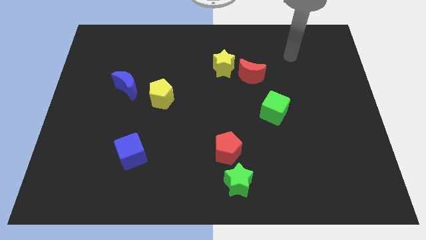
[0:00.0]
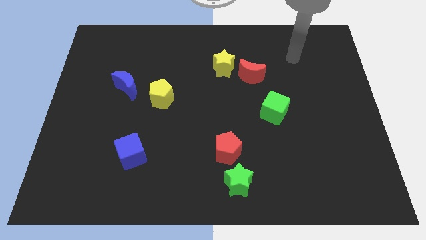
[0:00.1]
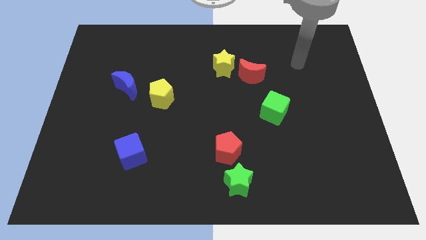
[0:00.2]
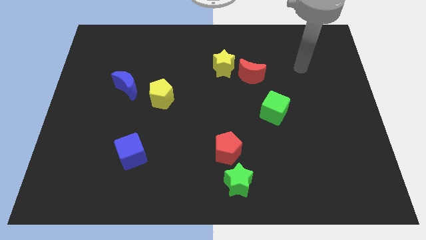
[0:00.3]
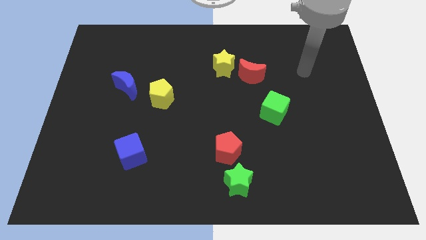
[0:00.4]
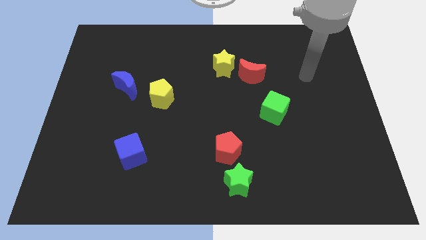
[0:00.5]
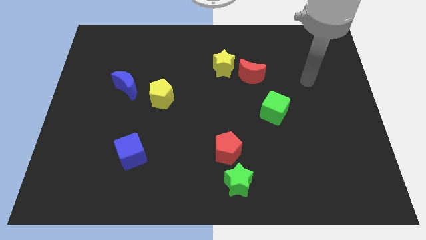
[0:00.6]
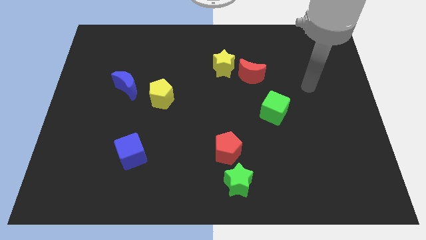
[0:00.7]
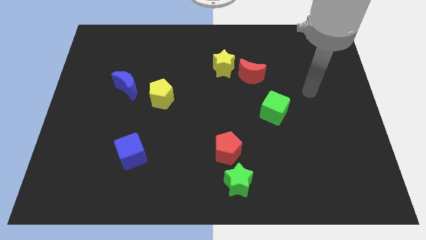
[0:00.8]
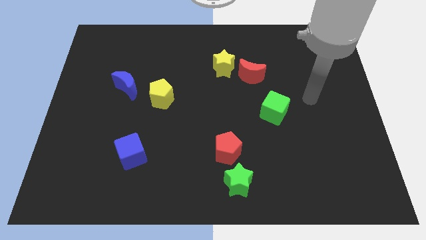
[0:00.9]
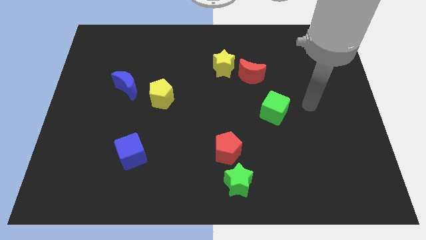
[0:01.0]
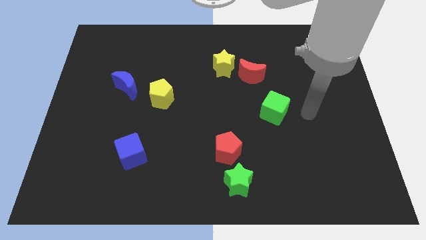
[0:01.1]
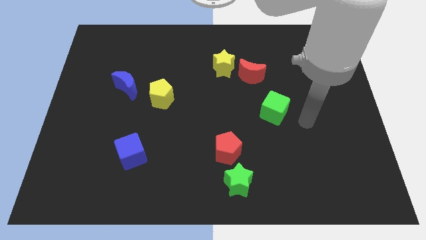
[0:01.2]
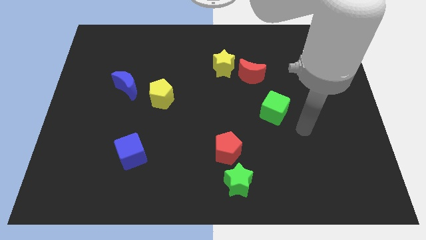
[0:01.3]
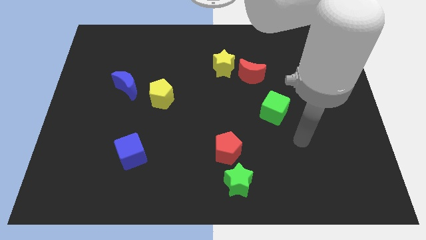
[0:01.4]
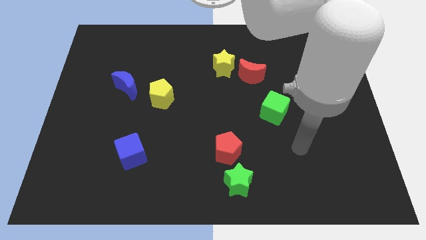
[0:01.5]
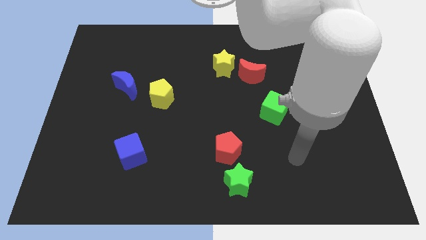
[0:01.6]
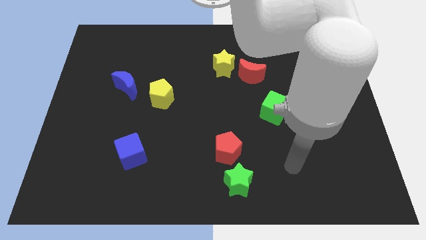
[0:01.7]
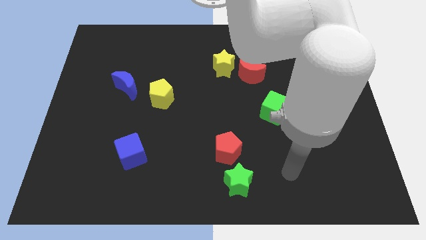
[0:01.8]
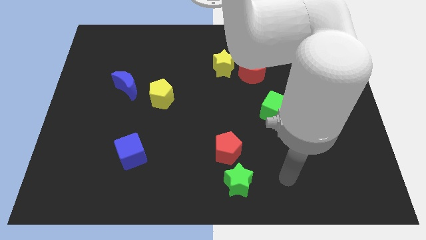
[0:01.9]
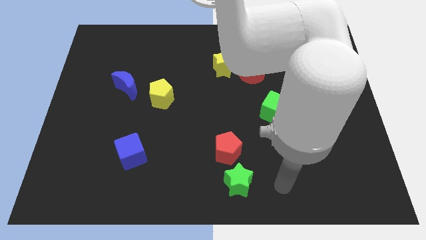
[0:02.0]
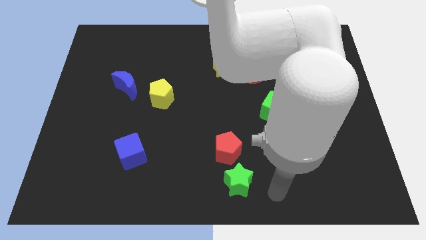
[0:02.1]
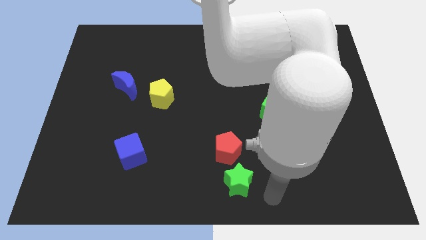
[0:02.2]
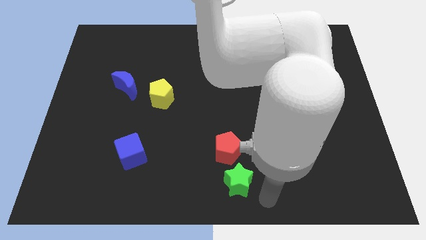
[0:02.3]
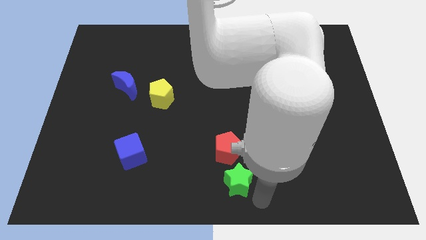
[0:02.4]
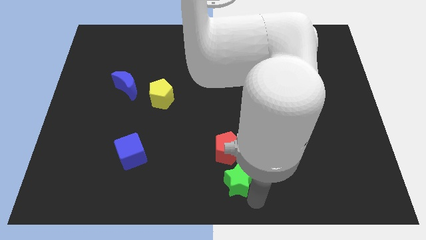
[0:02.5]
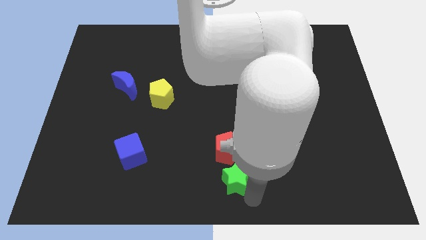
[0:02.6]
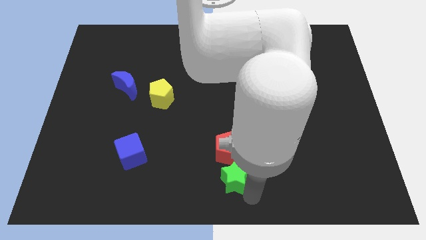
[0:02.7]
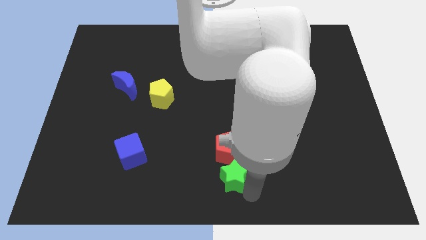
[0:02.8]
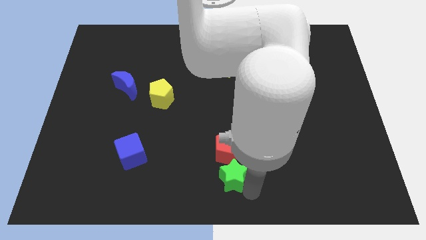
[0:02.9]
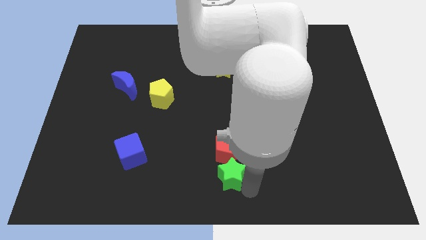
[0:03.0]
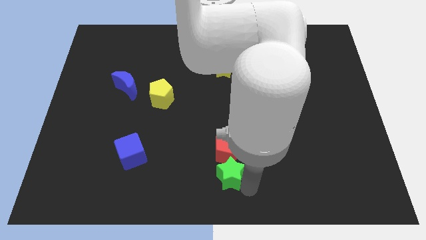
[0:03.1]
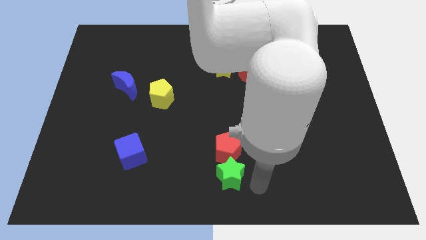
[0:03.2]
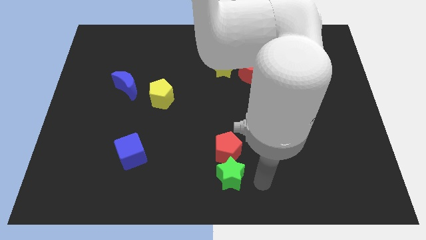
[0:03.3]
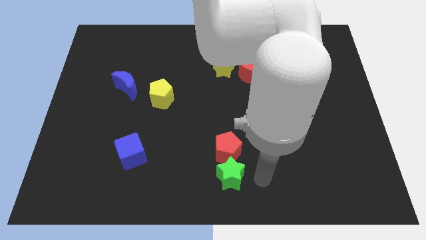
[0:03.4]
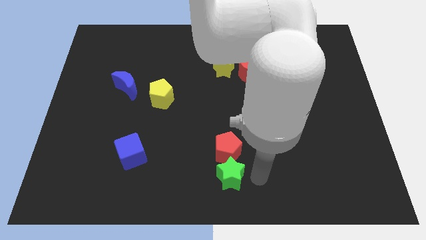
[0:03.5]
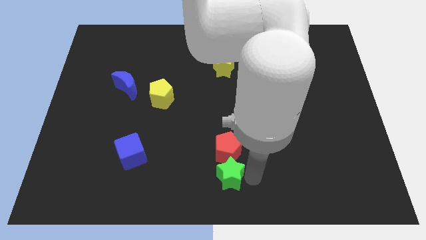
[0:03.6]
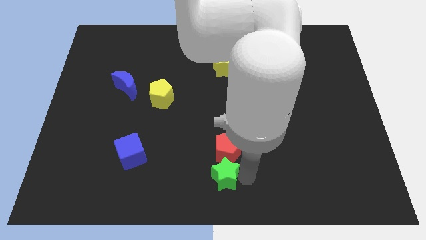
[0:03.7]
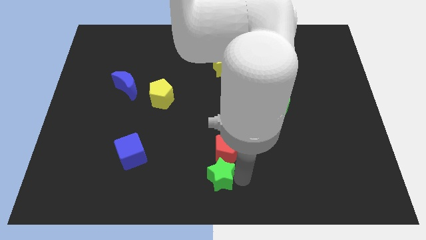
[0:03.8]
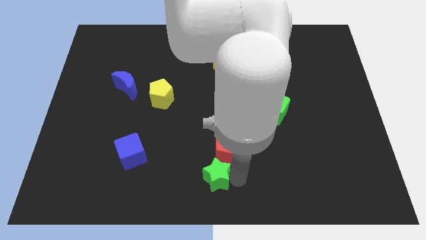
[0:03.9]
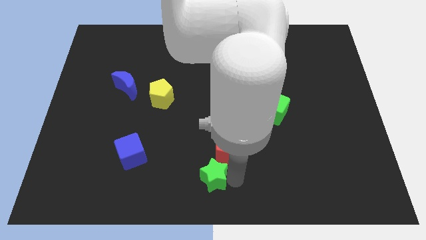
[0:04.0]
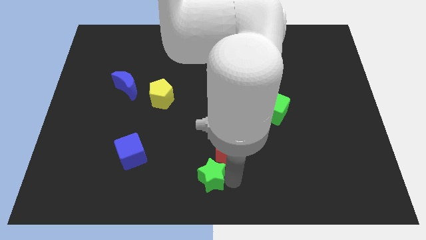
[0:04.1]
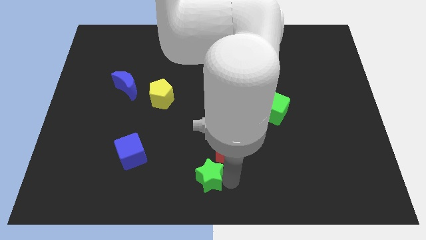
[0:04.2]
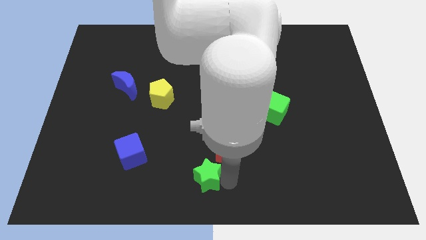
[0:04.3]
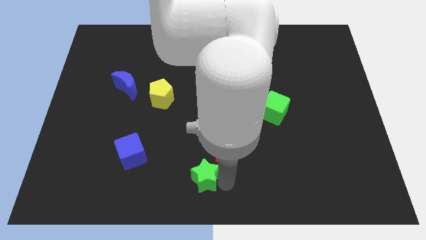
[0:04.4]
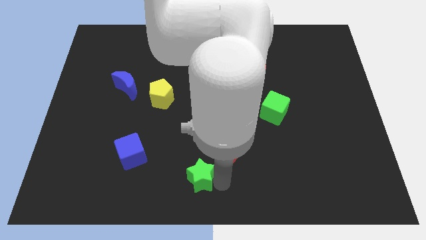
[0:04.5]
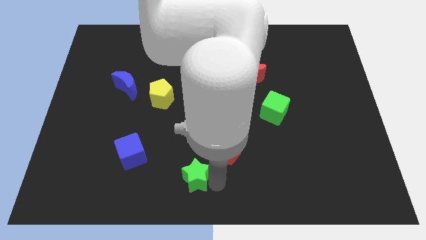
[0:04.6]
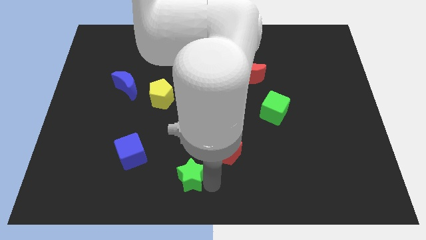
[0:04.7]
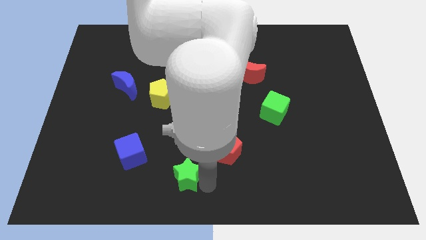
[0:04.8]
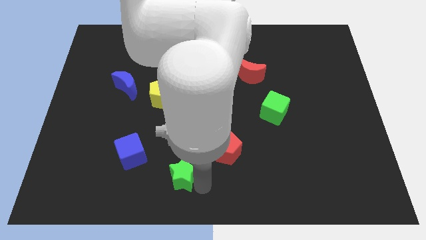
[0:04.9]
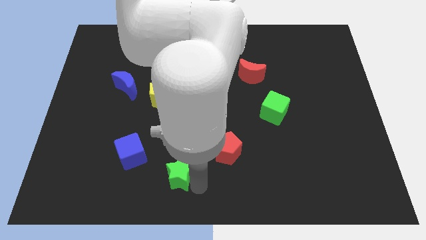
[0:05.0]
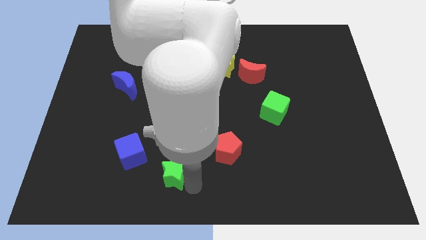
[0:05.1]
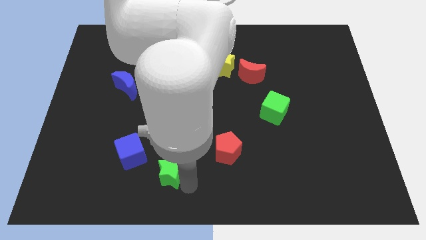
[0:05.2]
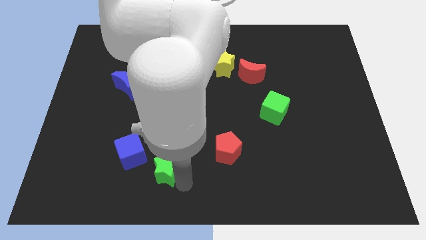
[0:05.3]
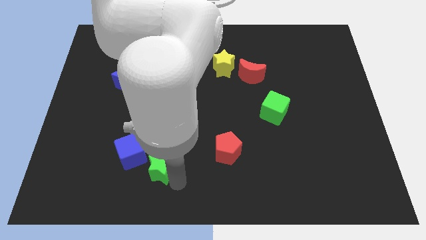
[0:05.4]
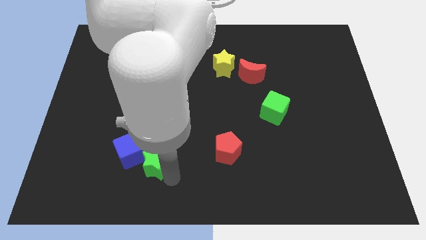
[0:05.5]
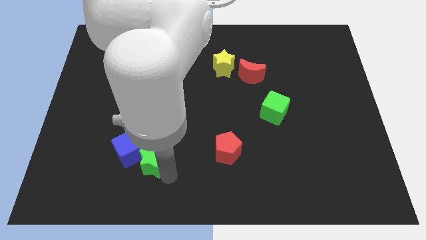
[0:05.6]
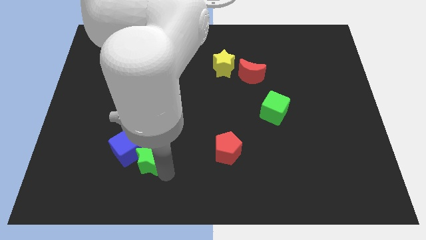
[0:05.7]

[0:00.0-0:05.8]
slide the green star next to the blue cube

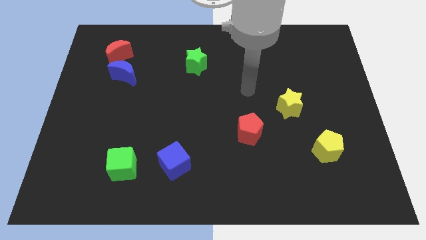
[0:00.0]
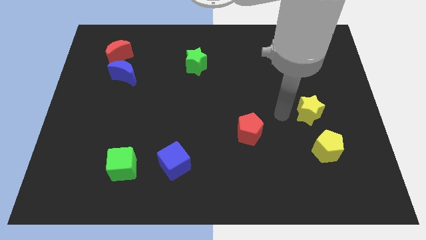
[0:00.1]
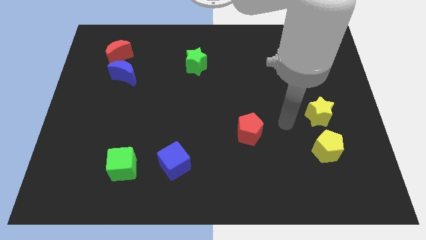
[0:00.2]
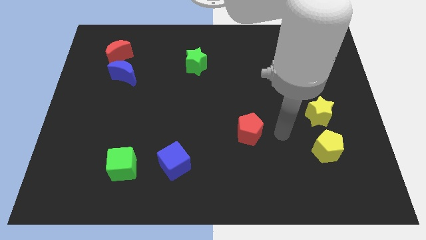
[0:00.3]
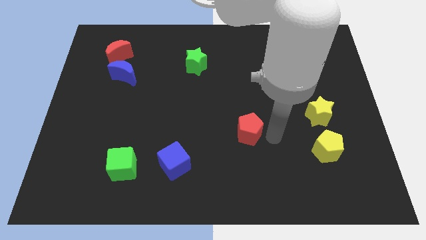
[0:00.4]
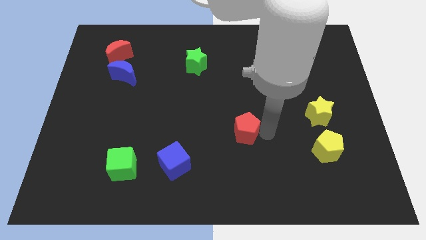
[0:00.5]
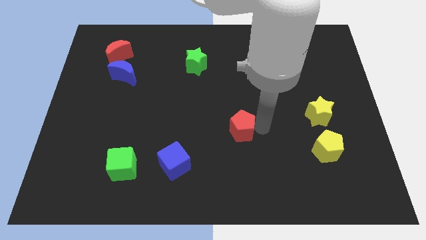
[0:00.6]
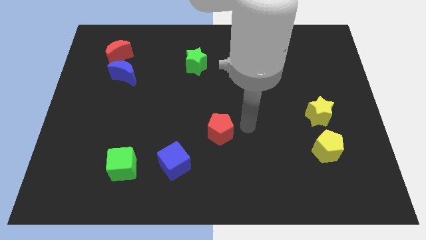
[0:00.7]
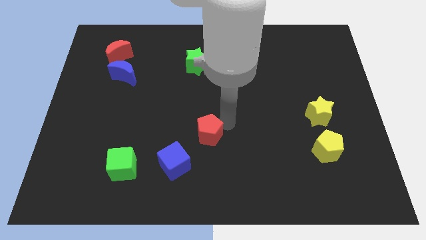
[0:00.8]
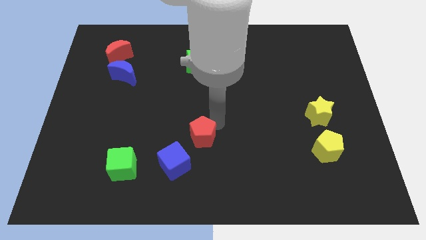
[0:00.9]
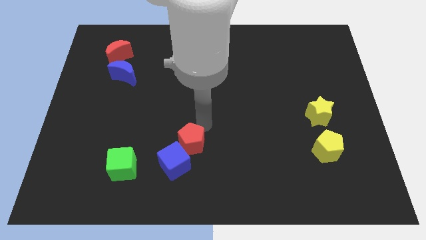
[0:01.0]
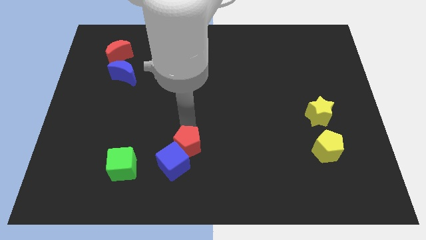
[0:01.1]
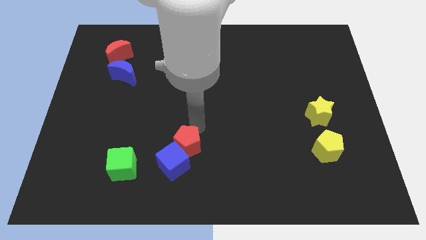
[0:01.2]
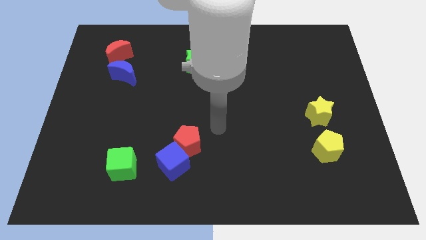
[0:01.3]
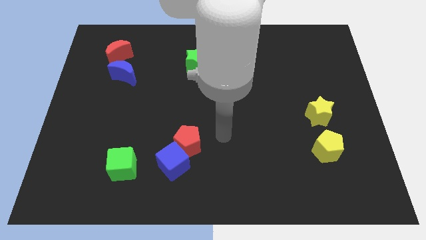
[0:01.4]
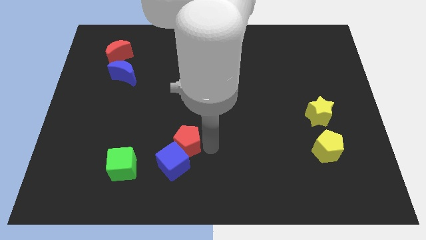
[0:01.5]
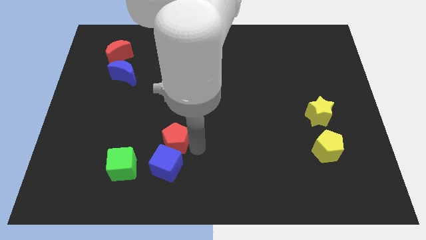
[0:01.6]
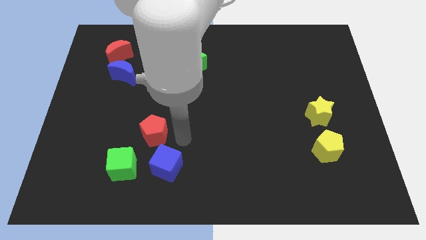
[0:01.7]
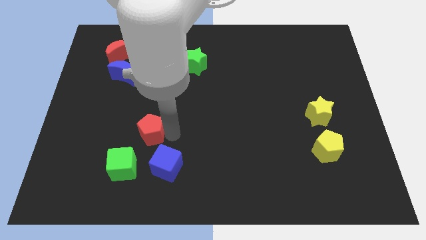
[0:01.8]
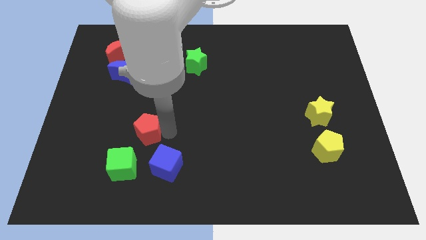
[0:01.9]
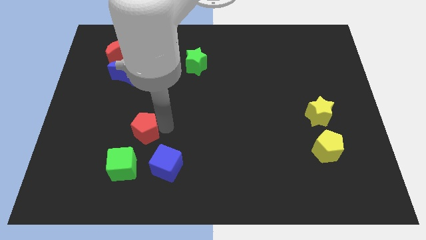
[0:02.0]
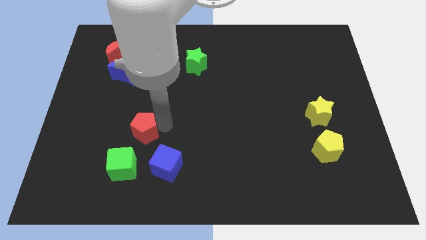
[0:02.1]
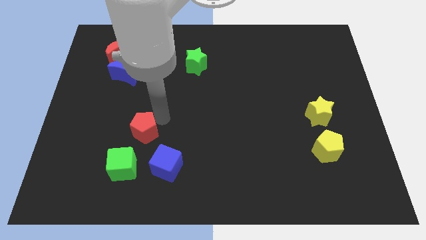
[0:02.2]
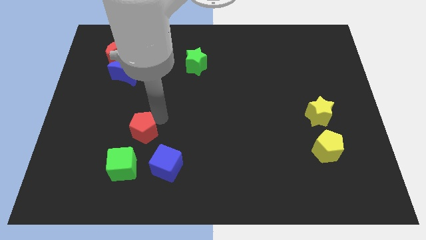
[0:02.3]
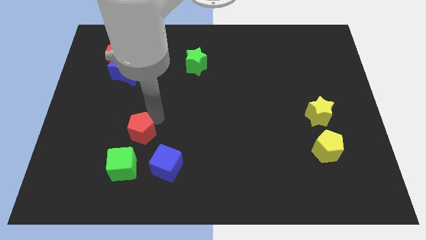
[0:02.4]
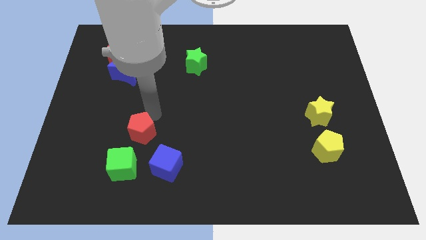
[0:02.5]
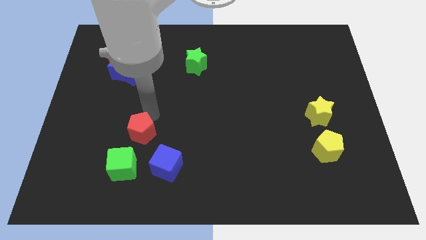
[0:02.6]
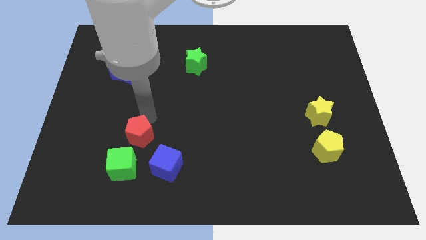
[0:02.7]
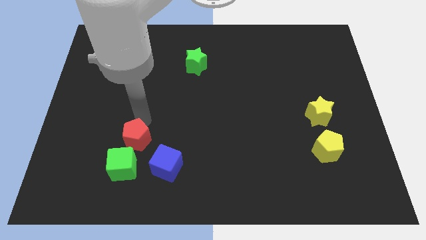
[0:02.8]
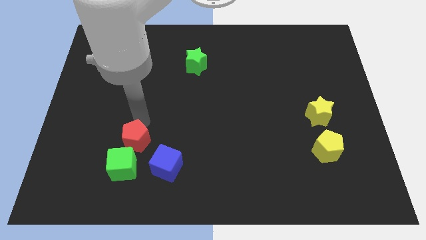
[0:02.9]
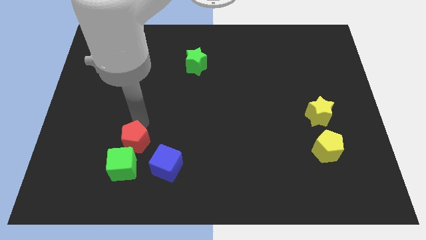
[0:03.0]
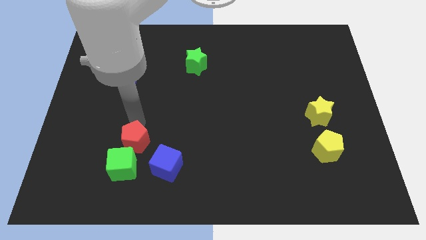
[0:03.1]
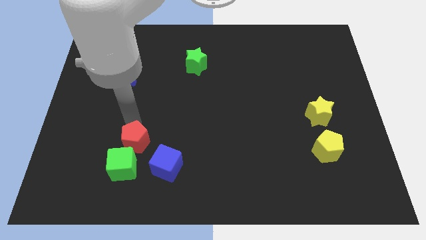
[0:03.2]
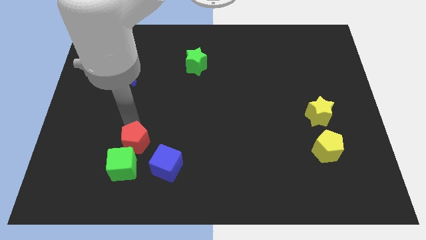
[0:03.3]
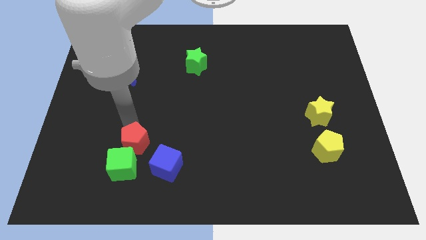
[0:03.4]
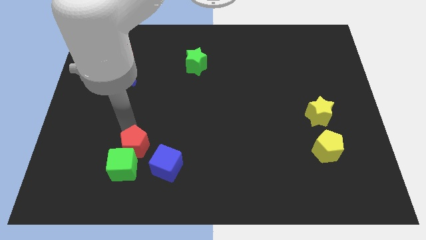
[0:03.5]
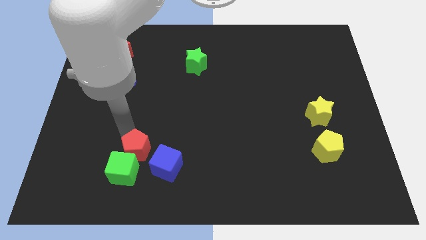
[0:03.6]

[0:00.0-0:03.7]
push the red pentagon to the green cube
